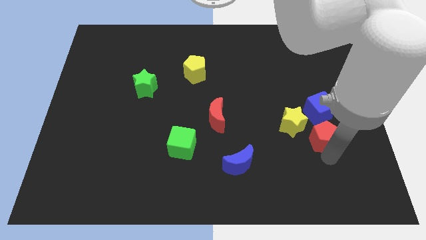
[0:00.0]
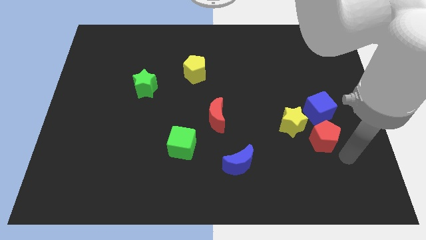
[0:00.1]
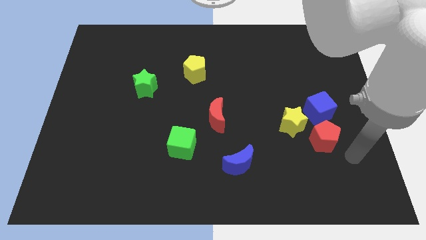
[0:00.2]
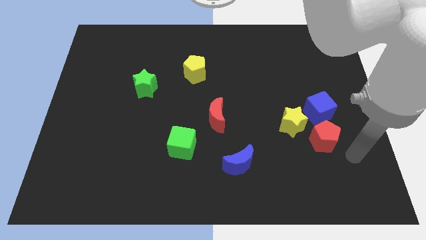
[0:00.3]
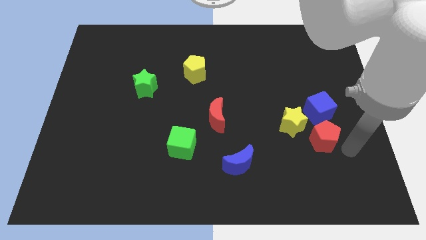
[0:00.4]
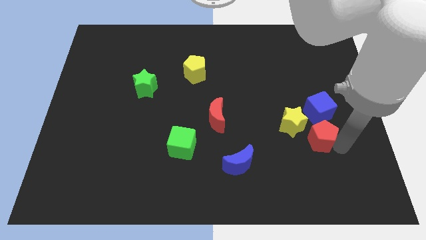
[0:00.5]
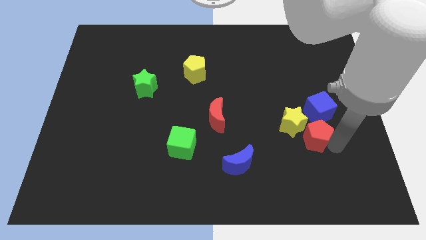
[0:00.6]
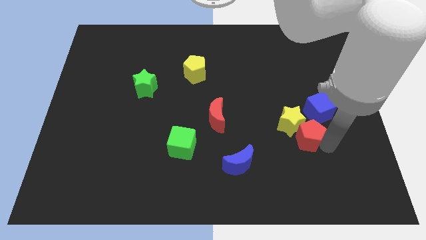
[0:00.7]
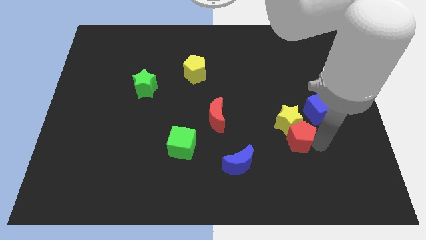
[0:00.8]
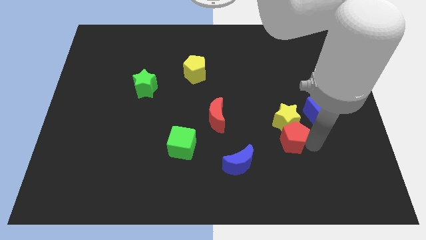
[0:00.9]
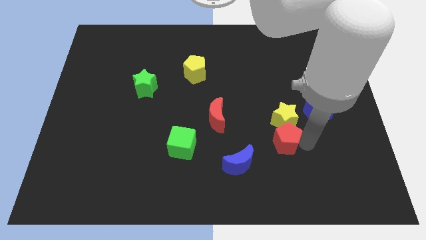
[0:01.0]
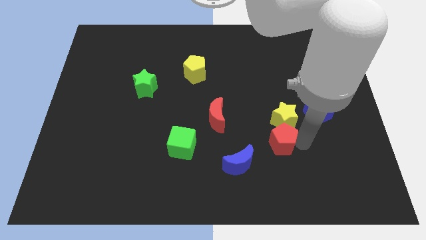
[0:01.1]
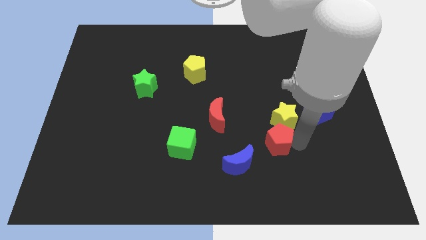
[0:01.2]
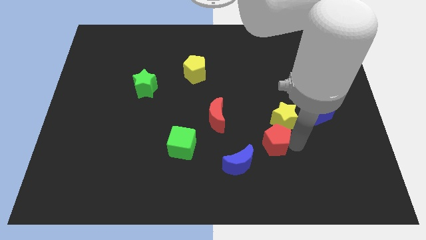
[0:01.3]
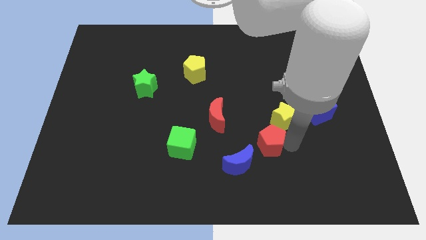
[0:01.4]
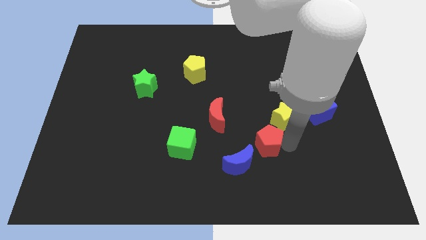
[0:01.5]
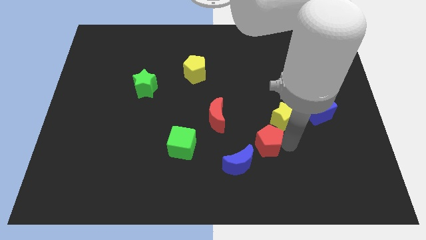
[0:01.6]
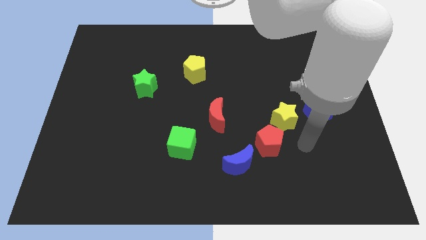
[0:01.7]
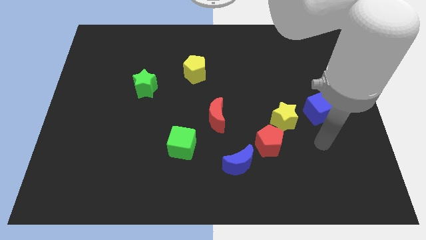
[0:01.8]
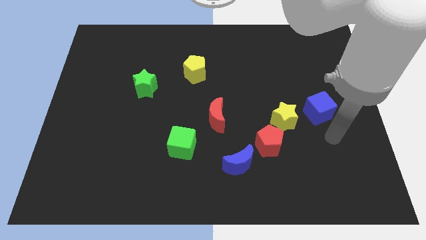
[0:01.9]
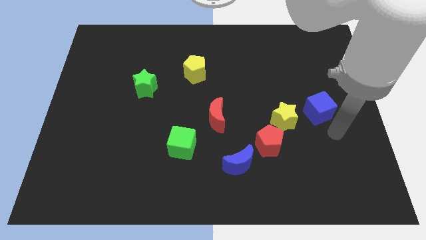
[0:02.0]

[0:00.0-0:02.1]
place the red pentagon in between blue crescent and yellow star

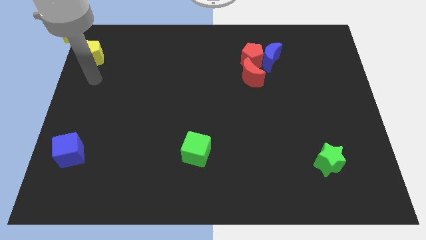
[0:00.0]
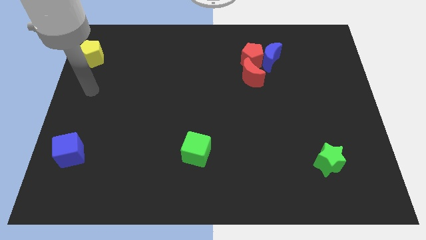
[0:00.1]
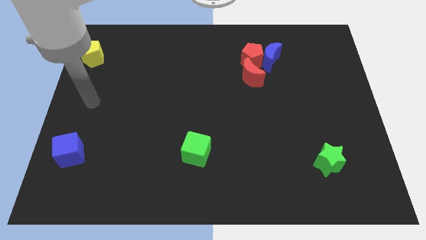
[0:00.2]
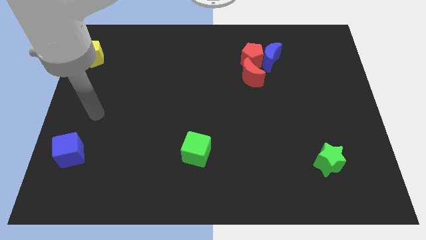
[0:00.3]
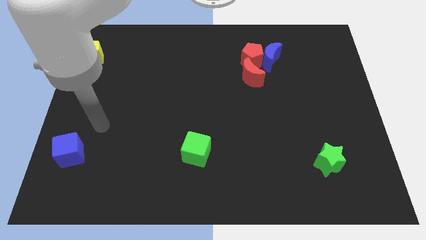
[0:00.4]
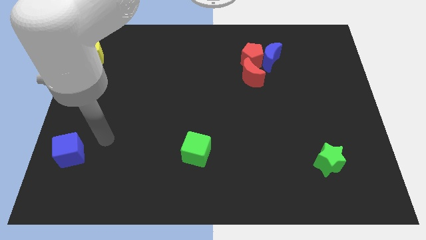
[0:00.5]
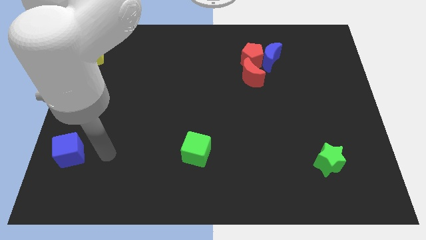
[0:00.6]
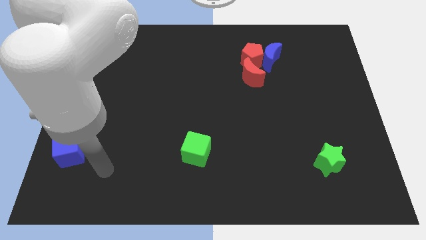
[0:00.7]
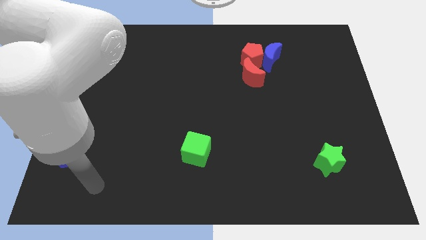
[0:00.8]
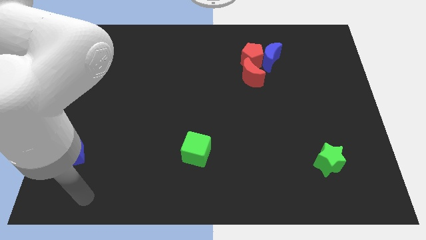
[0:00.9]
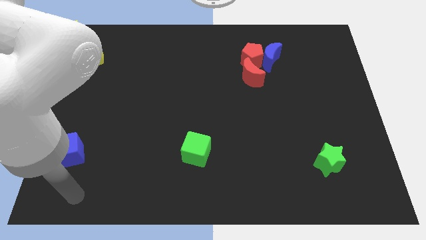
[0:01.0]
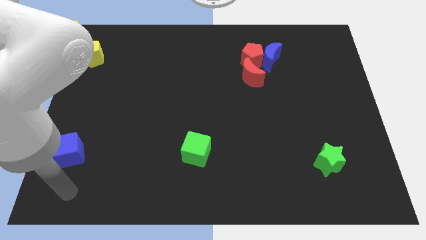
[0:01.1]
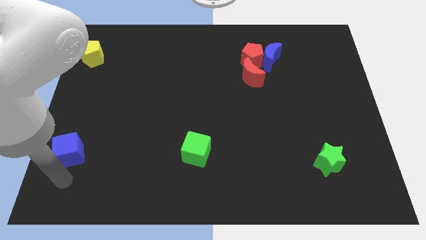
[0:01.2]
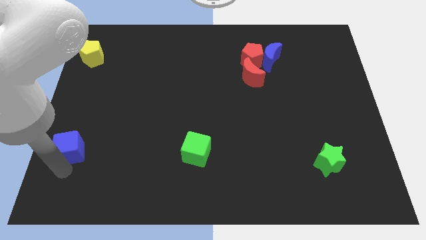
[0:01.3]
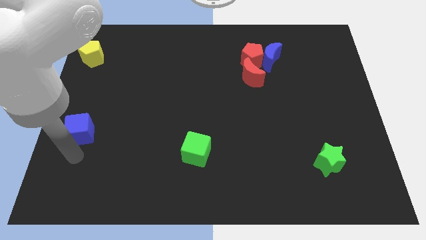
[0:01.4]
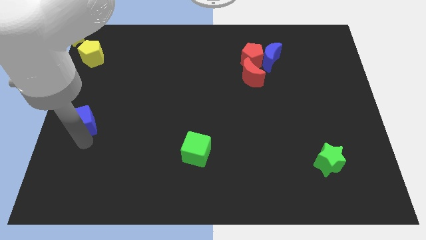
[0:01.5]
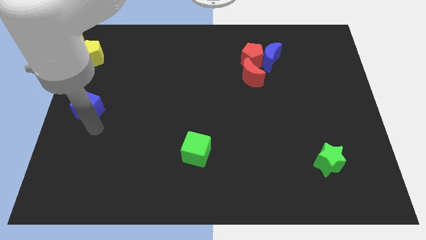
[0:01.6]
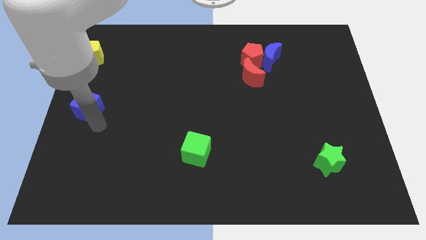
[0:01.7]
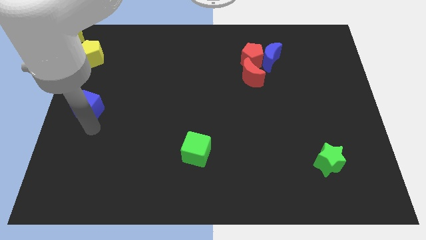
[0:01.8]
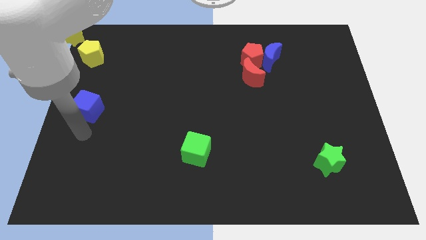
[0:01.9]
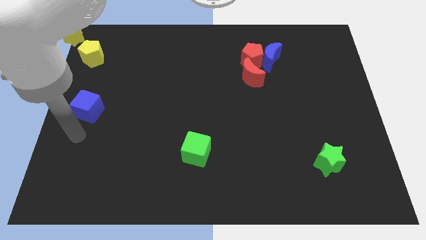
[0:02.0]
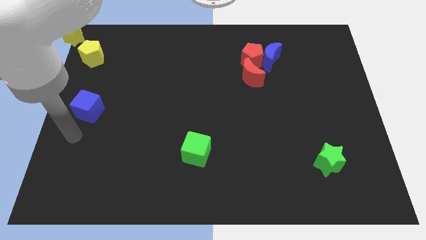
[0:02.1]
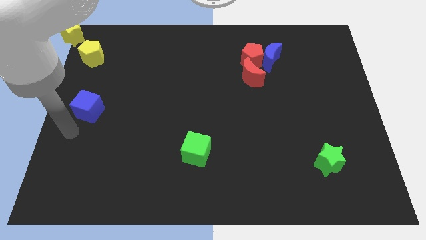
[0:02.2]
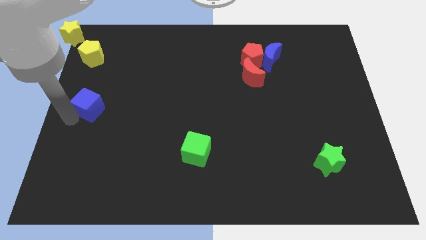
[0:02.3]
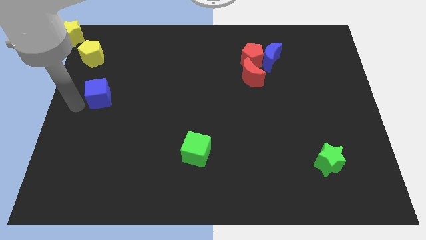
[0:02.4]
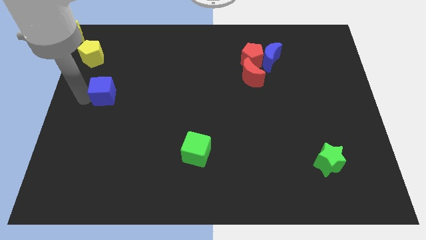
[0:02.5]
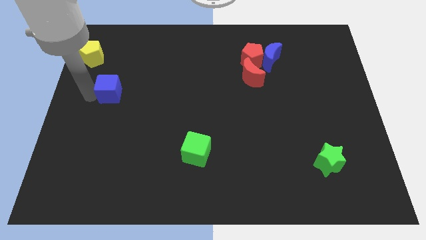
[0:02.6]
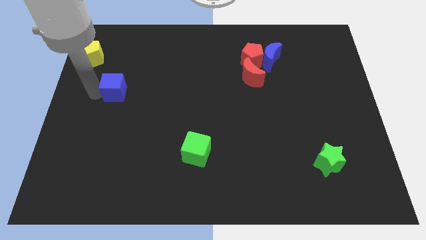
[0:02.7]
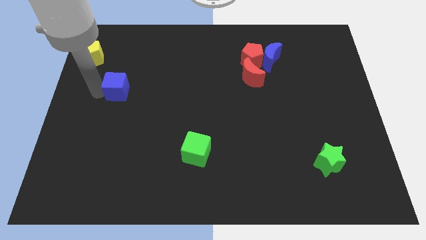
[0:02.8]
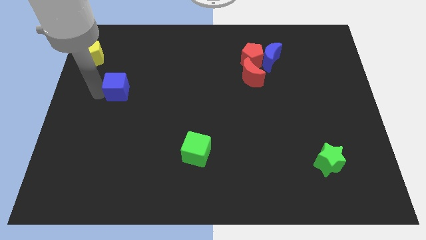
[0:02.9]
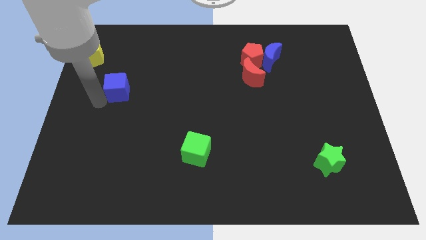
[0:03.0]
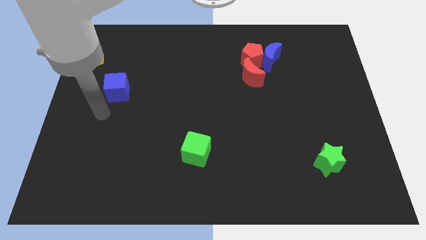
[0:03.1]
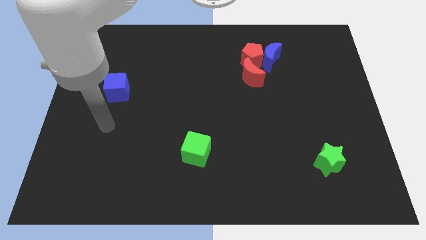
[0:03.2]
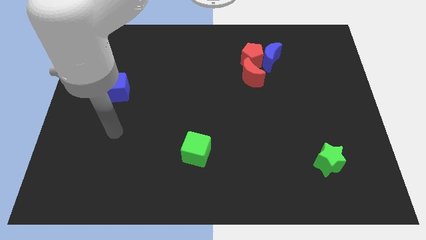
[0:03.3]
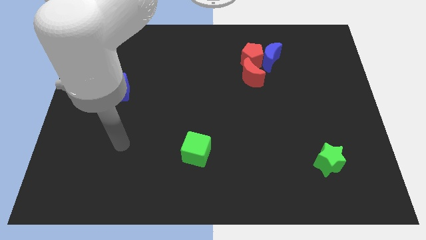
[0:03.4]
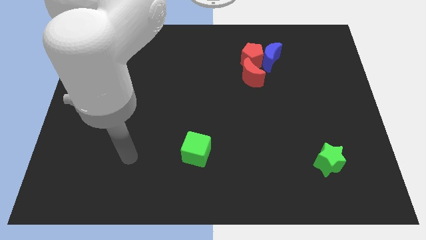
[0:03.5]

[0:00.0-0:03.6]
slightly push the blue cube upwards

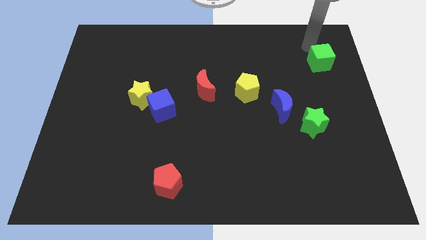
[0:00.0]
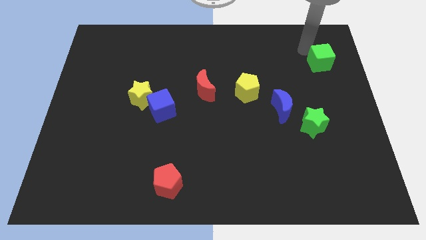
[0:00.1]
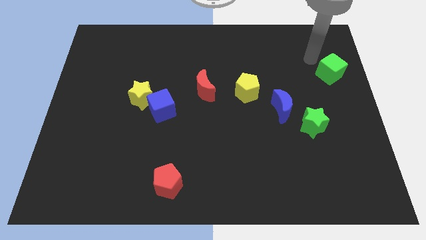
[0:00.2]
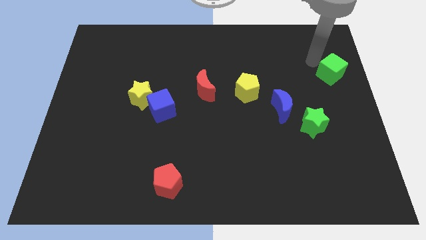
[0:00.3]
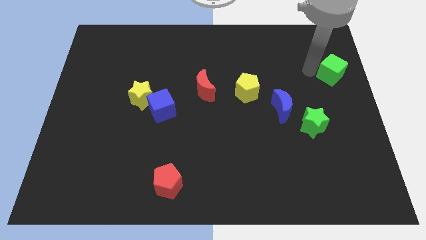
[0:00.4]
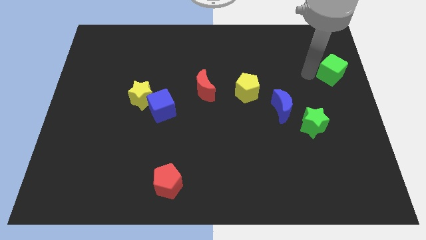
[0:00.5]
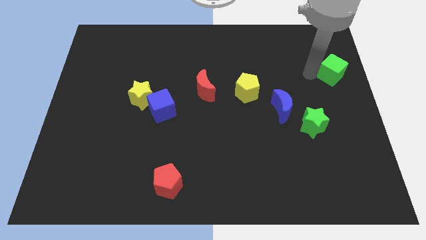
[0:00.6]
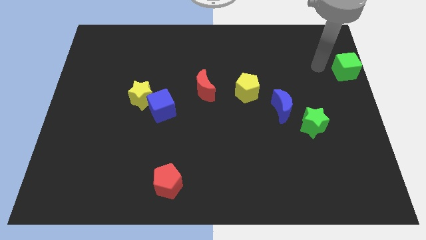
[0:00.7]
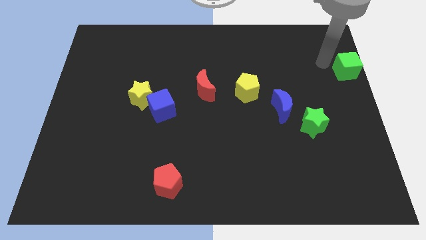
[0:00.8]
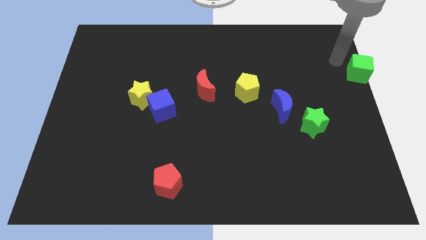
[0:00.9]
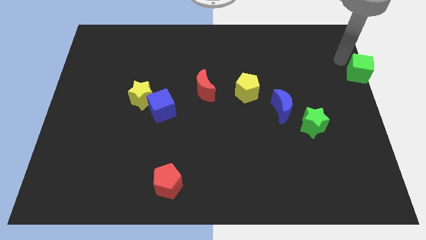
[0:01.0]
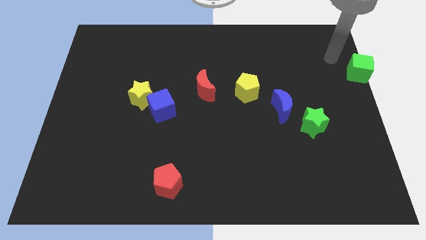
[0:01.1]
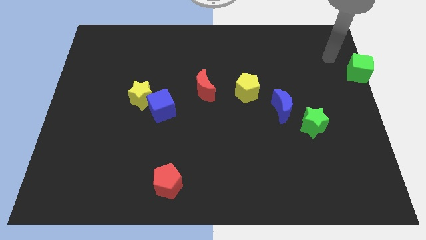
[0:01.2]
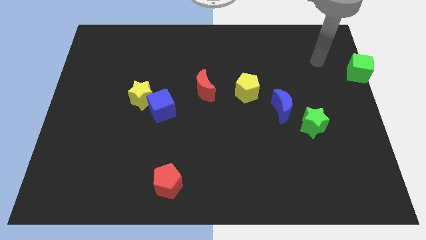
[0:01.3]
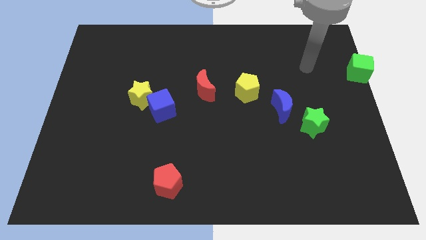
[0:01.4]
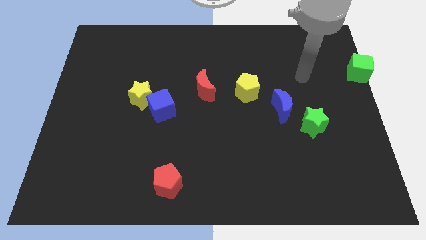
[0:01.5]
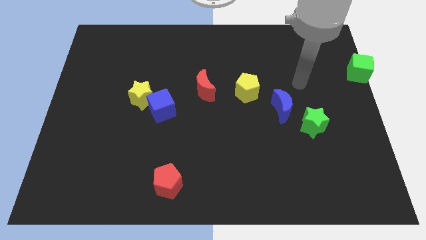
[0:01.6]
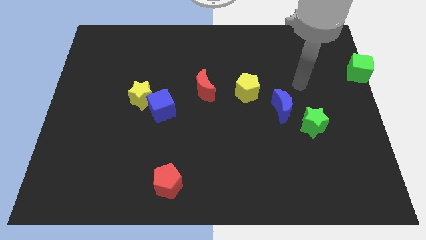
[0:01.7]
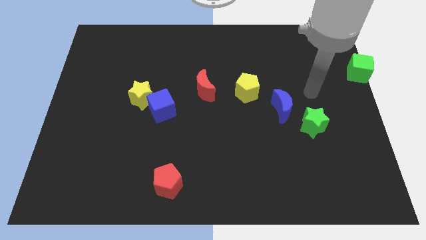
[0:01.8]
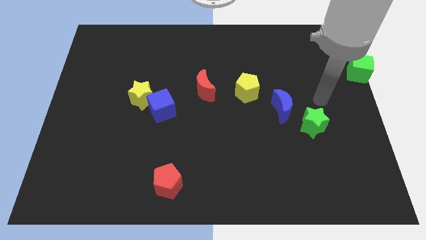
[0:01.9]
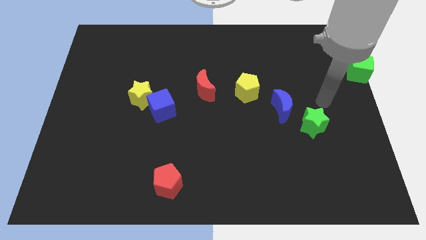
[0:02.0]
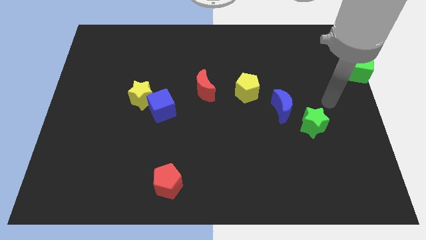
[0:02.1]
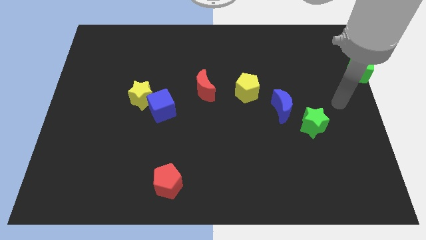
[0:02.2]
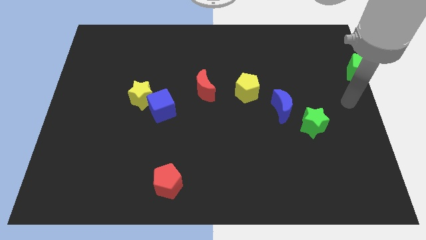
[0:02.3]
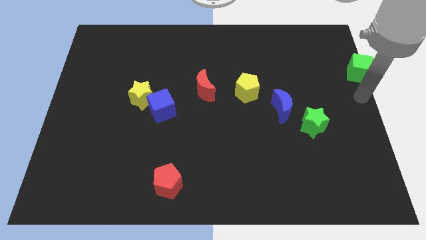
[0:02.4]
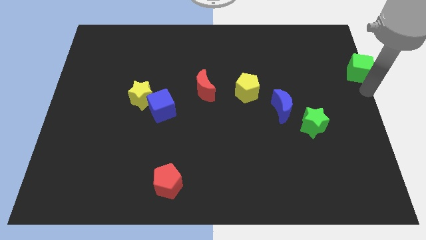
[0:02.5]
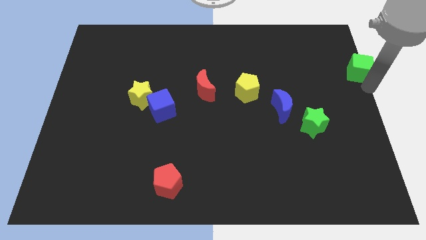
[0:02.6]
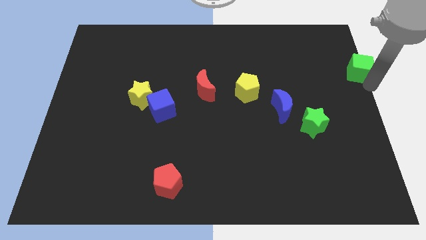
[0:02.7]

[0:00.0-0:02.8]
move the green square towards the right side of the board

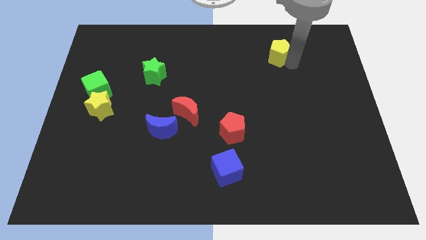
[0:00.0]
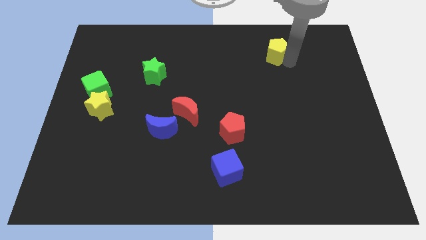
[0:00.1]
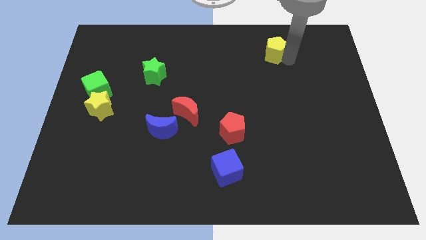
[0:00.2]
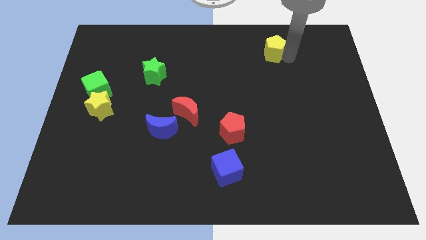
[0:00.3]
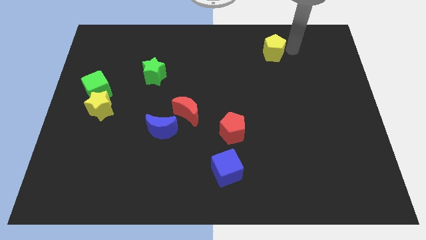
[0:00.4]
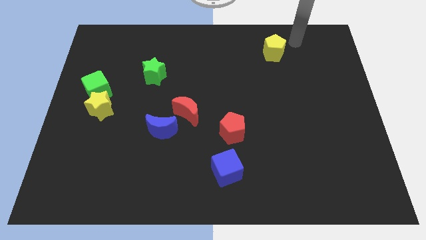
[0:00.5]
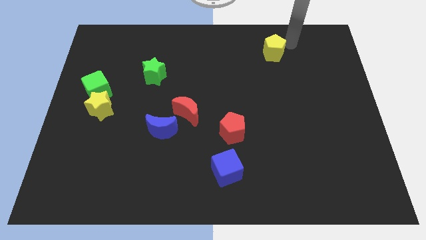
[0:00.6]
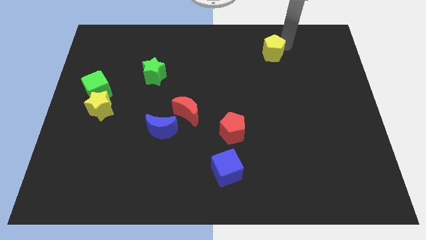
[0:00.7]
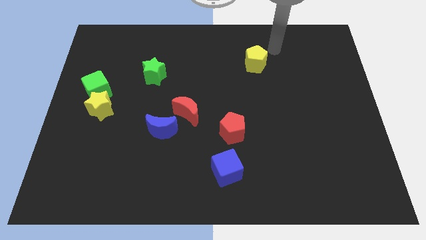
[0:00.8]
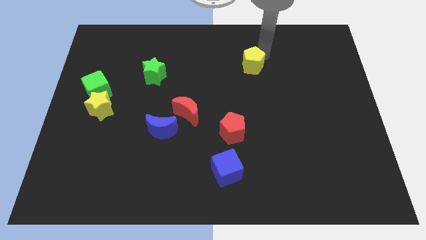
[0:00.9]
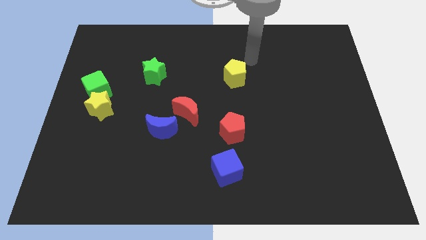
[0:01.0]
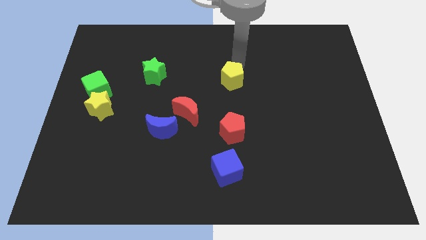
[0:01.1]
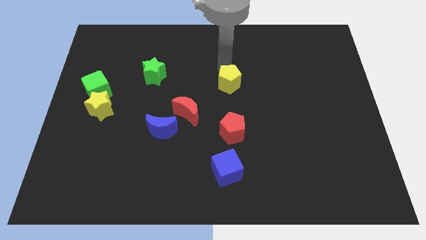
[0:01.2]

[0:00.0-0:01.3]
place the yellow pentagon vertically above the red pentagon
